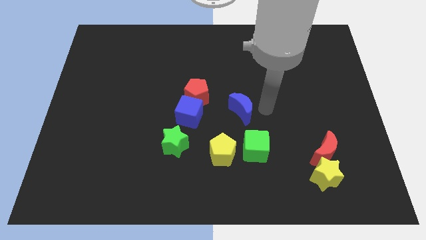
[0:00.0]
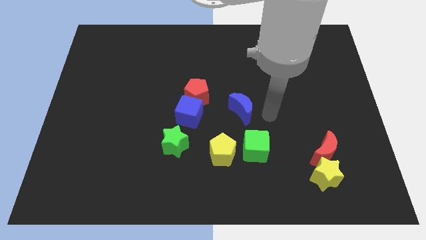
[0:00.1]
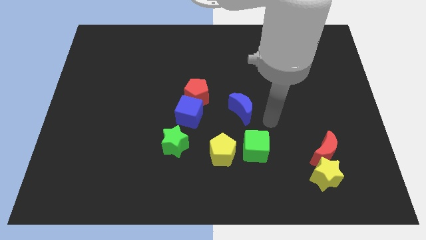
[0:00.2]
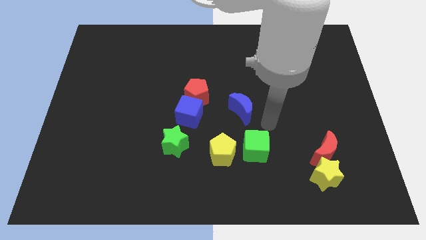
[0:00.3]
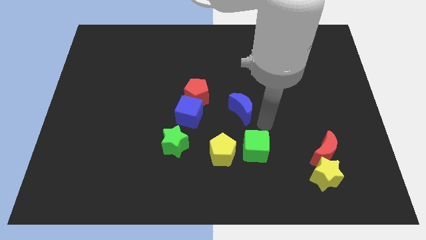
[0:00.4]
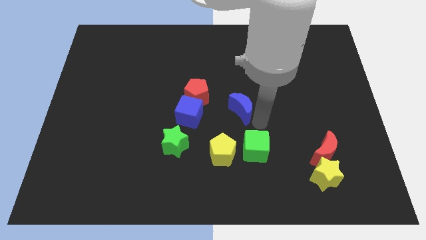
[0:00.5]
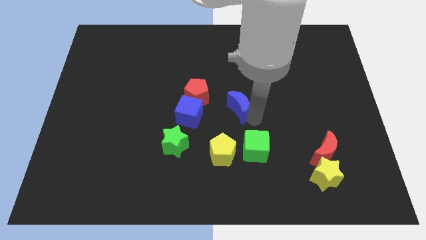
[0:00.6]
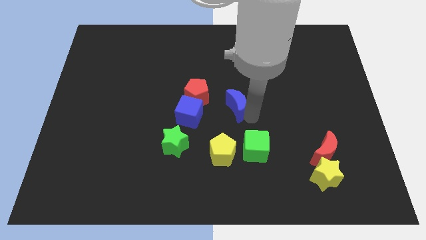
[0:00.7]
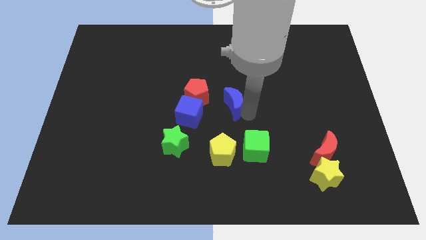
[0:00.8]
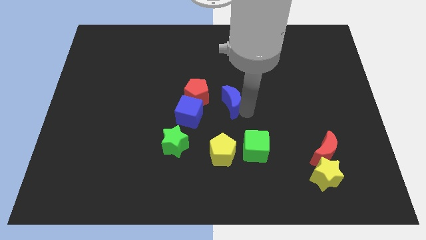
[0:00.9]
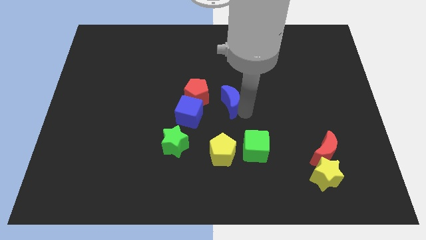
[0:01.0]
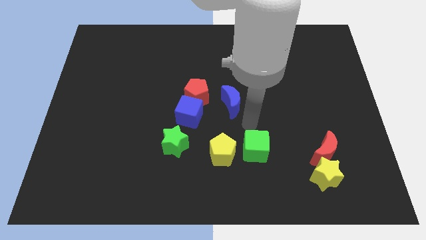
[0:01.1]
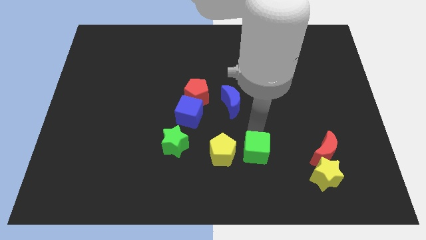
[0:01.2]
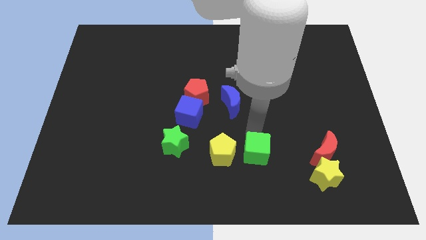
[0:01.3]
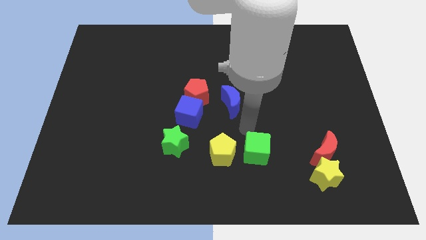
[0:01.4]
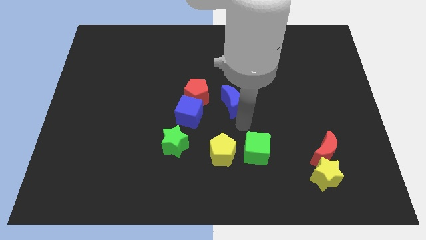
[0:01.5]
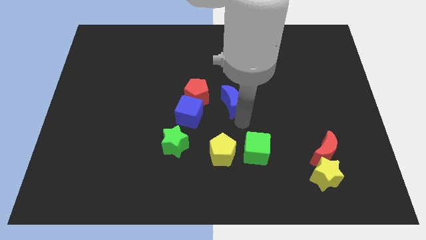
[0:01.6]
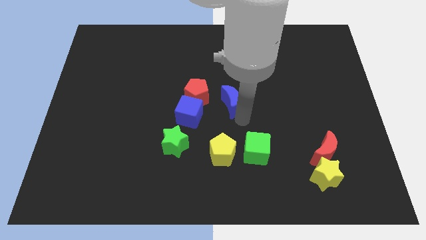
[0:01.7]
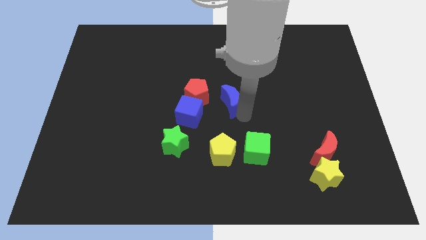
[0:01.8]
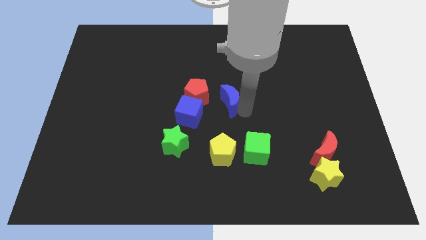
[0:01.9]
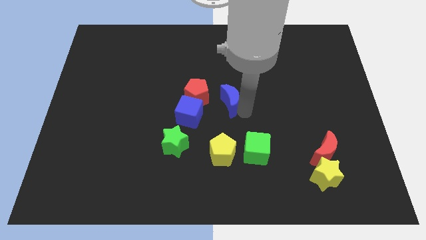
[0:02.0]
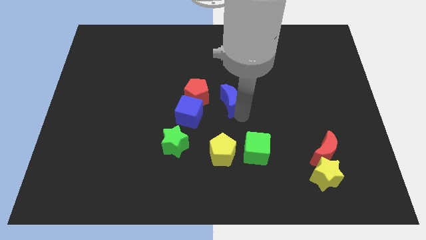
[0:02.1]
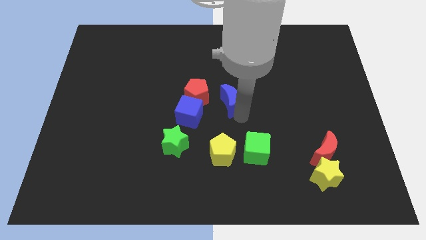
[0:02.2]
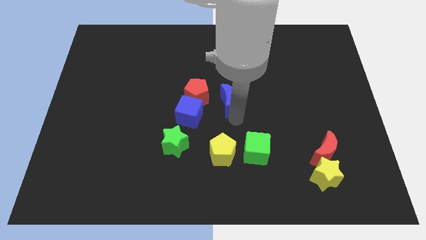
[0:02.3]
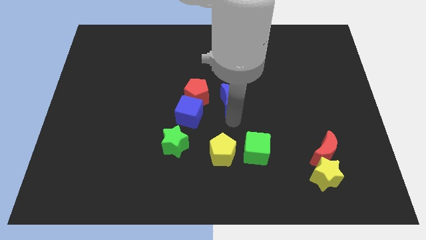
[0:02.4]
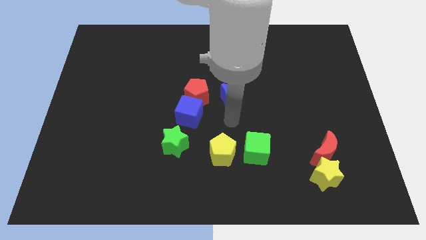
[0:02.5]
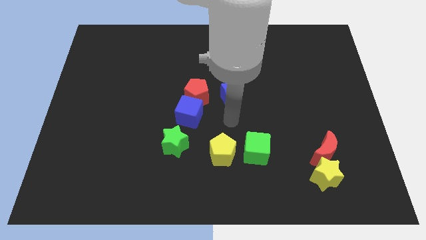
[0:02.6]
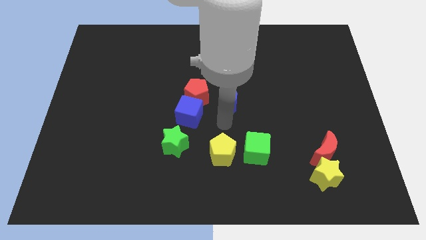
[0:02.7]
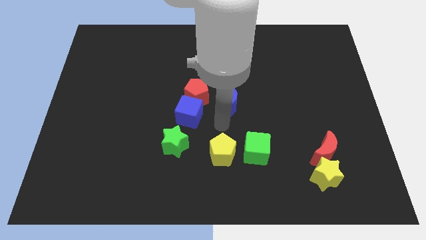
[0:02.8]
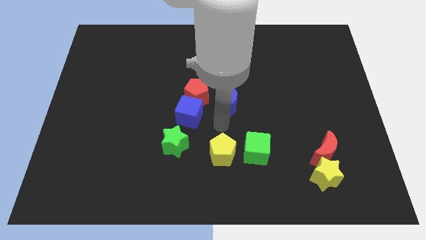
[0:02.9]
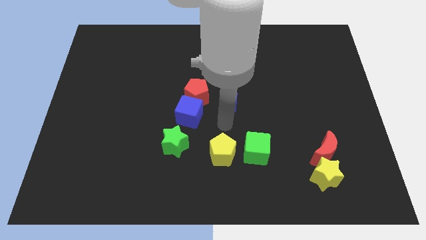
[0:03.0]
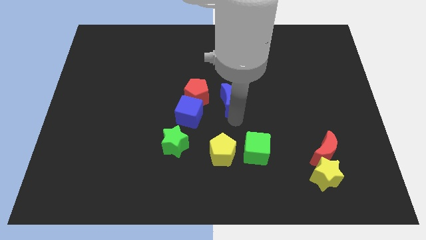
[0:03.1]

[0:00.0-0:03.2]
move the blue crescent to the right side of the red pentagon

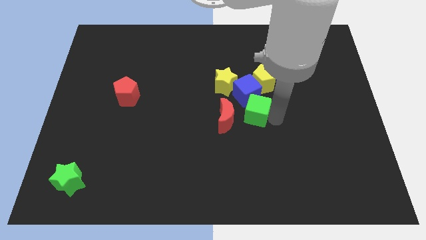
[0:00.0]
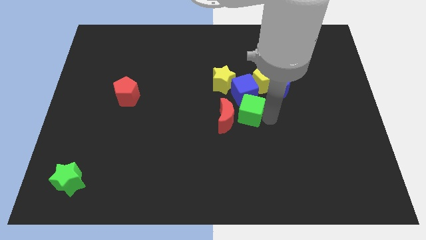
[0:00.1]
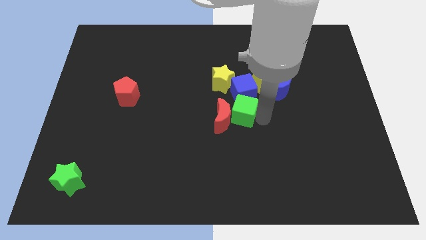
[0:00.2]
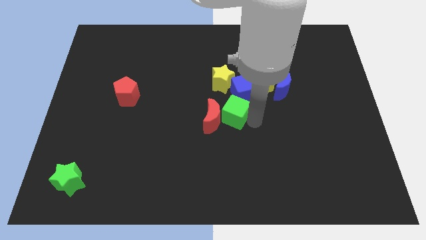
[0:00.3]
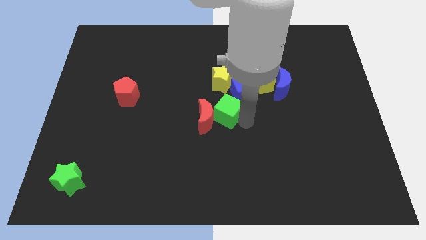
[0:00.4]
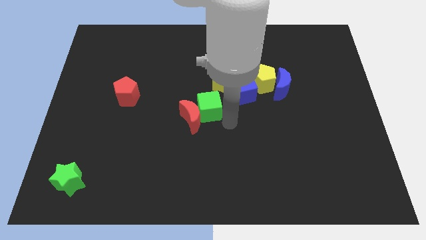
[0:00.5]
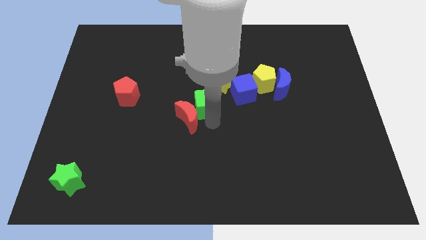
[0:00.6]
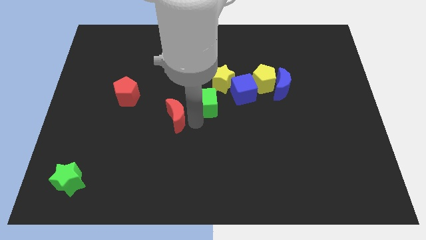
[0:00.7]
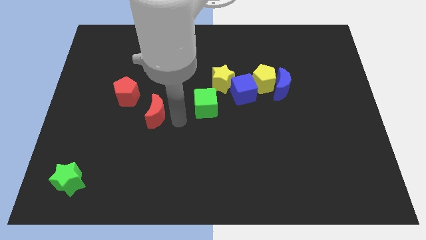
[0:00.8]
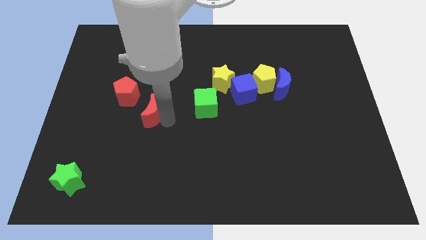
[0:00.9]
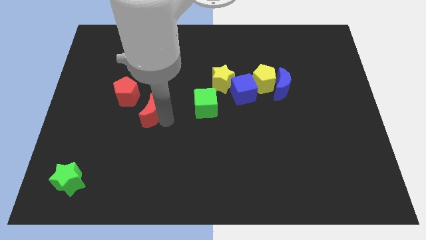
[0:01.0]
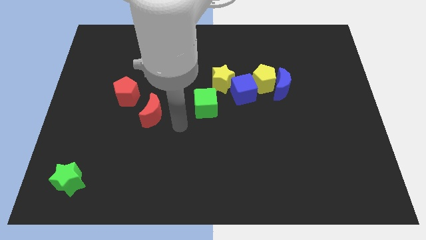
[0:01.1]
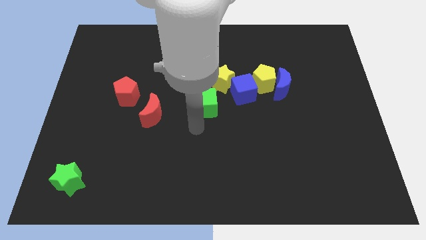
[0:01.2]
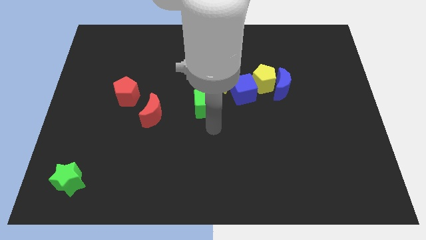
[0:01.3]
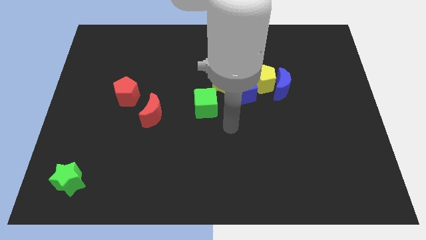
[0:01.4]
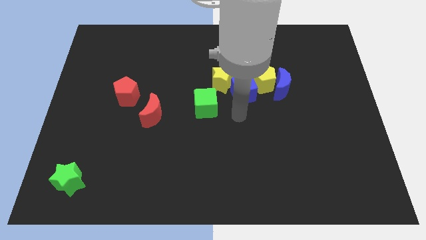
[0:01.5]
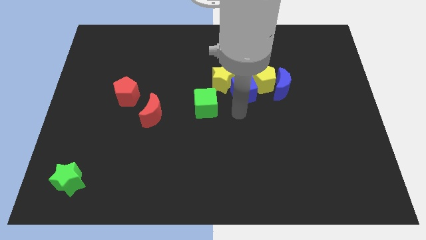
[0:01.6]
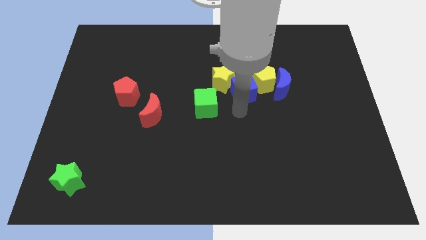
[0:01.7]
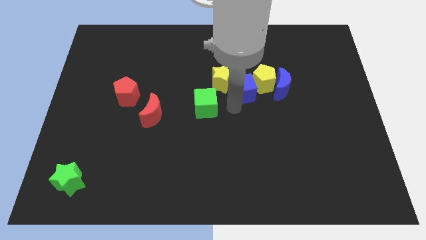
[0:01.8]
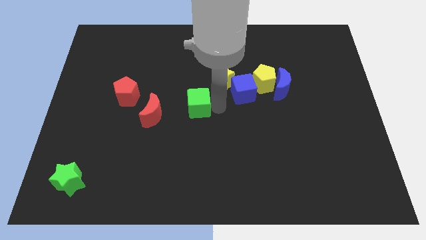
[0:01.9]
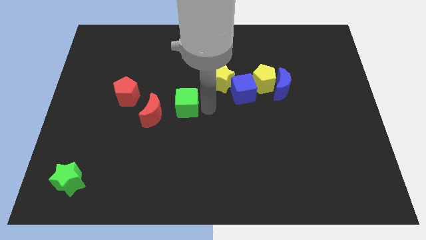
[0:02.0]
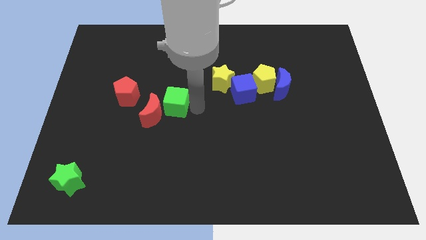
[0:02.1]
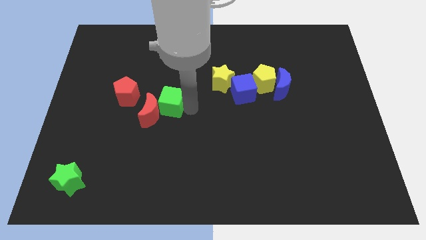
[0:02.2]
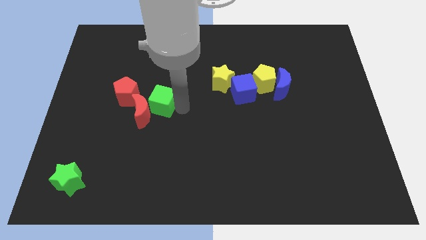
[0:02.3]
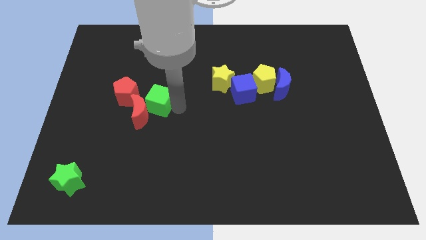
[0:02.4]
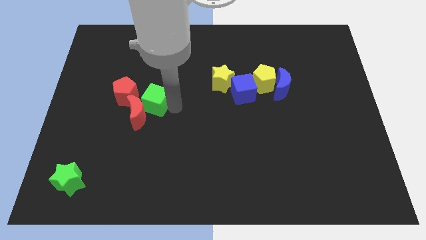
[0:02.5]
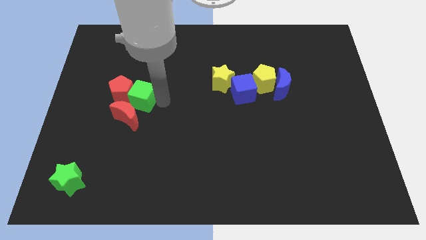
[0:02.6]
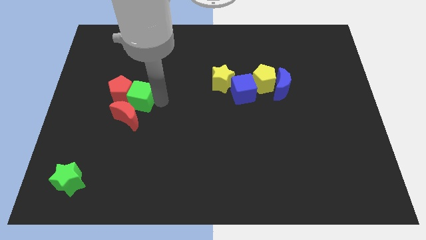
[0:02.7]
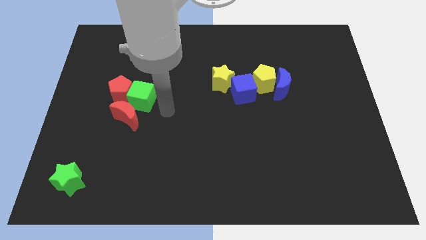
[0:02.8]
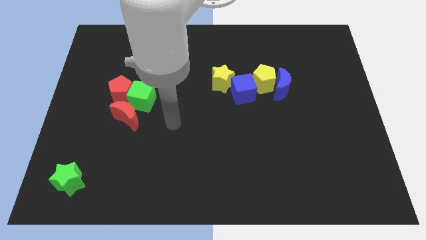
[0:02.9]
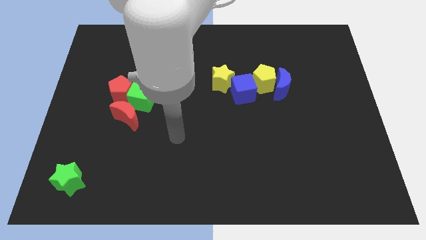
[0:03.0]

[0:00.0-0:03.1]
group up the red crescent green cube and red pentagon

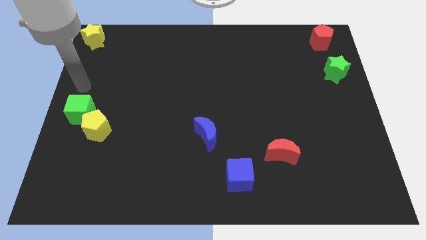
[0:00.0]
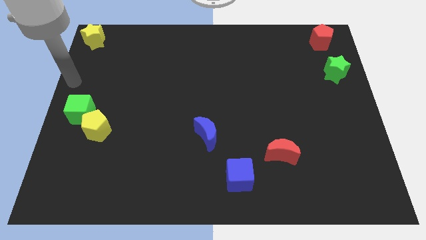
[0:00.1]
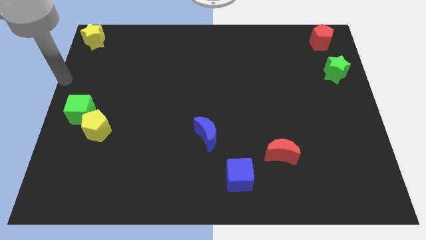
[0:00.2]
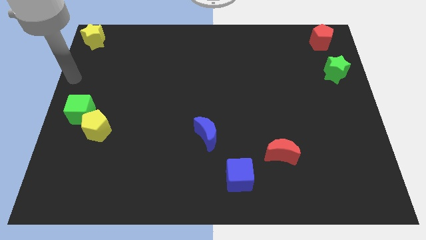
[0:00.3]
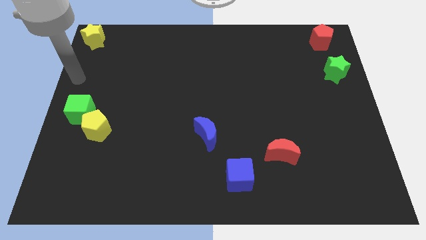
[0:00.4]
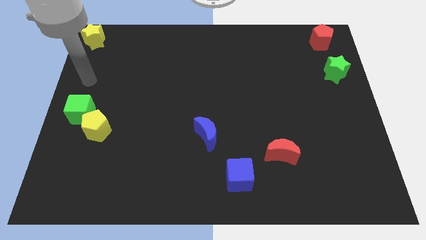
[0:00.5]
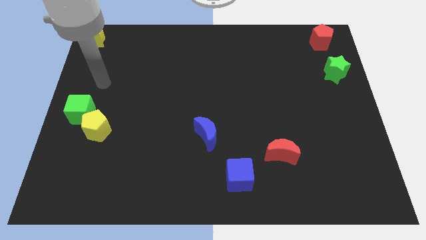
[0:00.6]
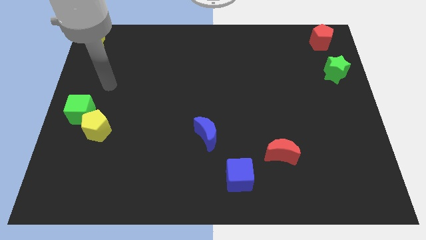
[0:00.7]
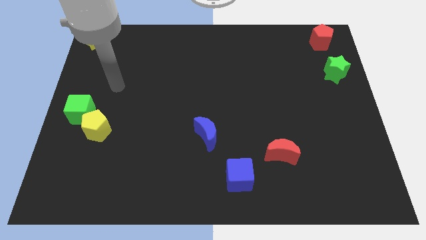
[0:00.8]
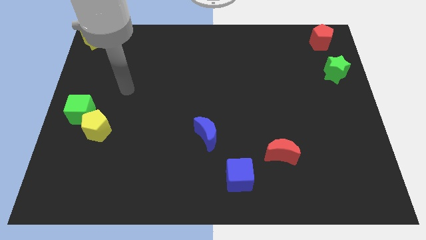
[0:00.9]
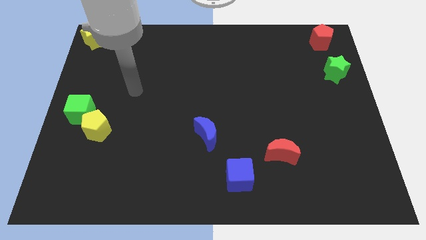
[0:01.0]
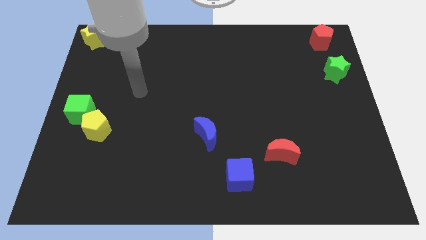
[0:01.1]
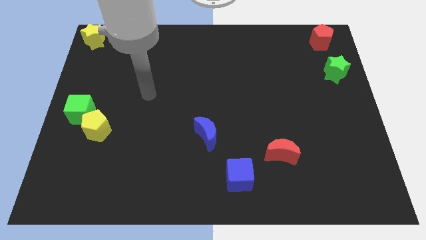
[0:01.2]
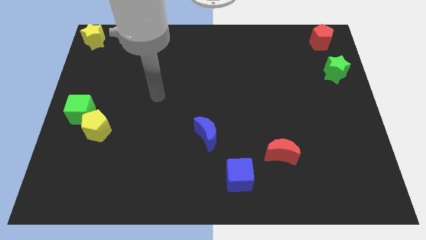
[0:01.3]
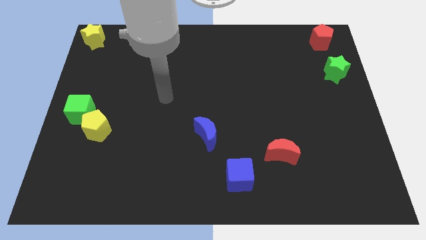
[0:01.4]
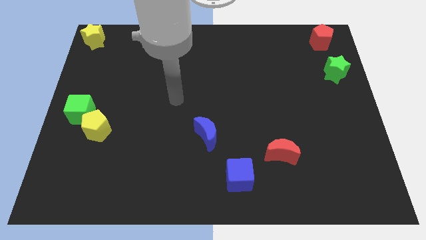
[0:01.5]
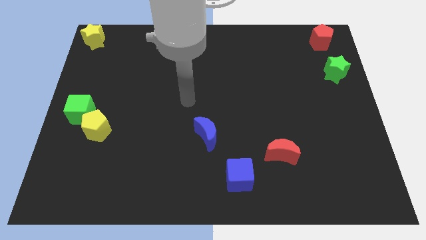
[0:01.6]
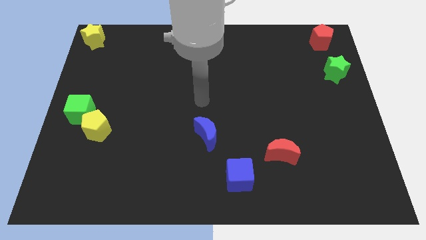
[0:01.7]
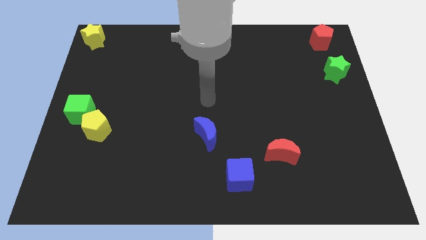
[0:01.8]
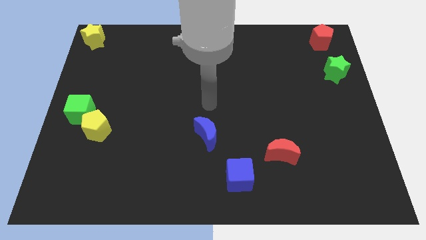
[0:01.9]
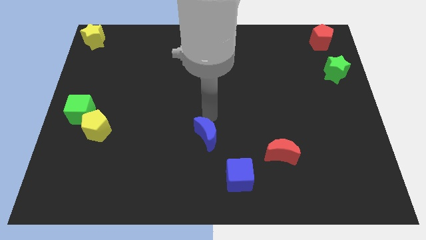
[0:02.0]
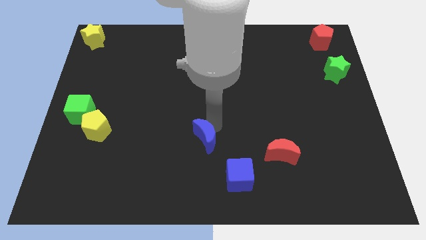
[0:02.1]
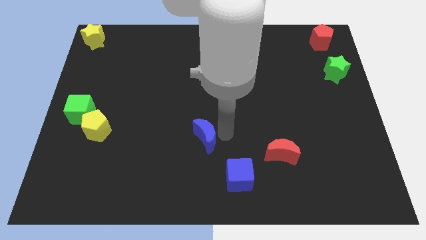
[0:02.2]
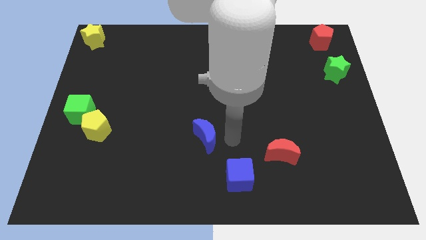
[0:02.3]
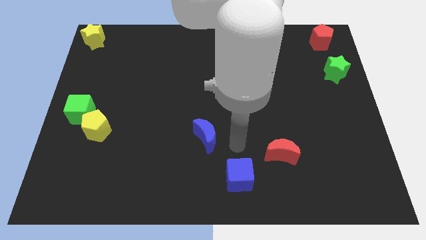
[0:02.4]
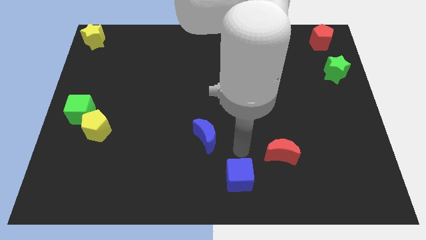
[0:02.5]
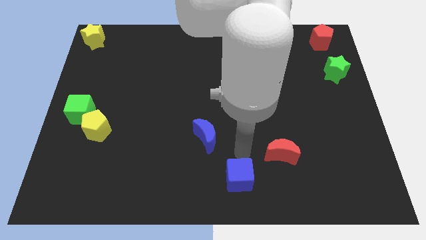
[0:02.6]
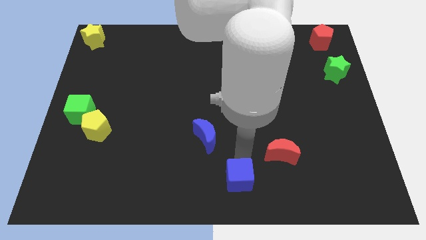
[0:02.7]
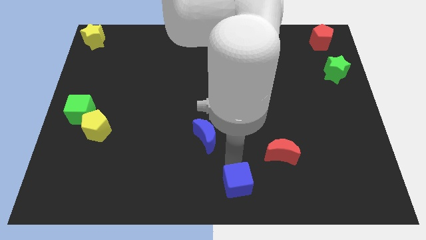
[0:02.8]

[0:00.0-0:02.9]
point your arm at the top of the blue cube
